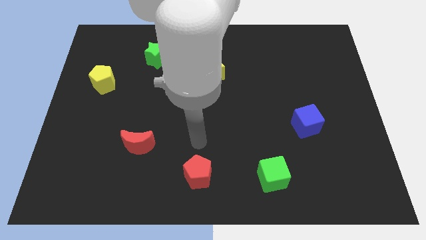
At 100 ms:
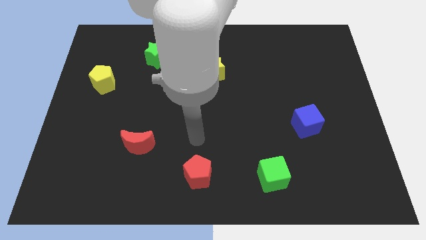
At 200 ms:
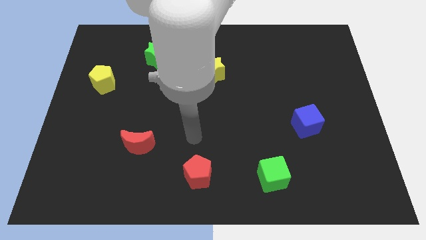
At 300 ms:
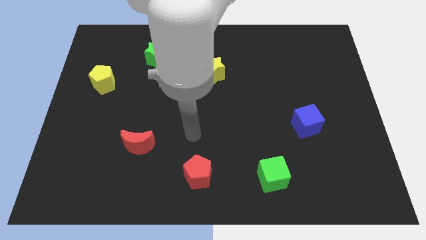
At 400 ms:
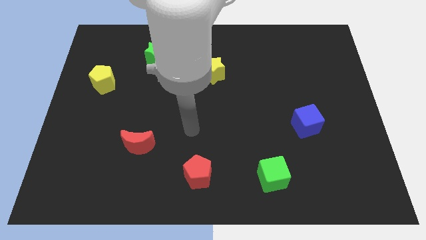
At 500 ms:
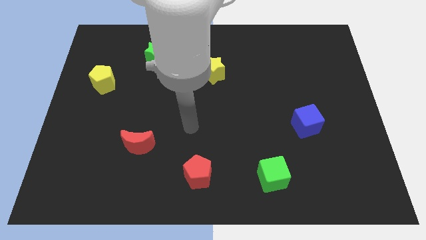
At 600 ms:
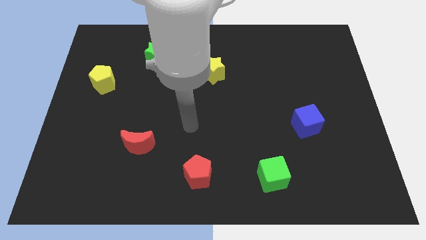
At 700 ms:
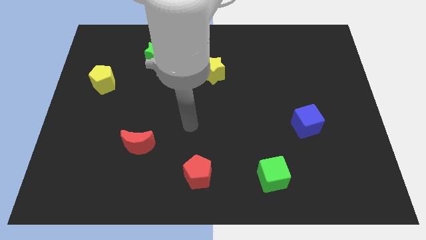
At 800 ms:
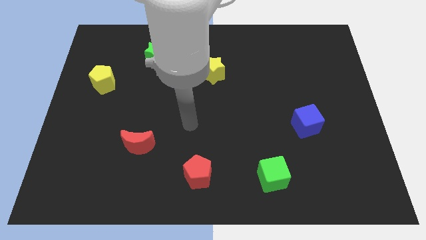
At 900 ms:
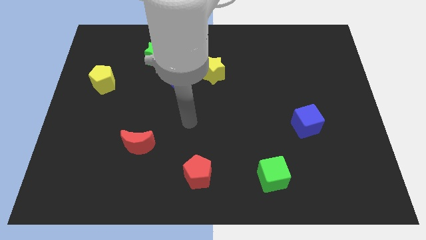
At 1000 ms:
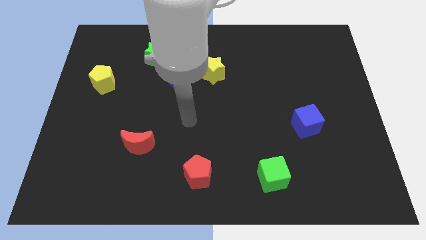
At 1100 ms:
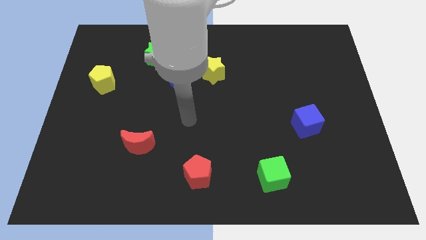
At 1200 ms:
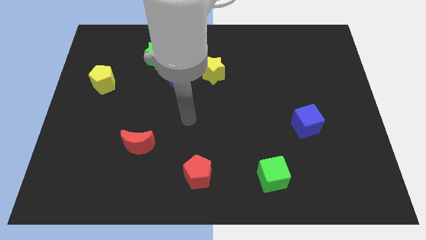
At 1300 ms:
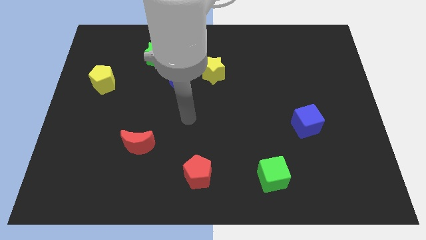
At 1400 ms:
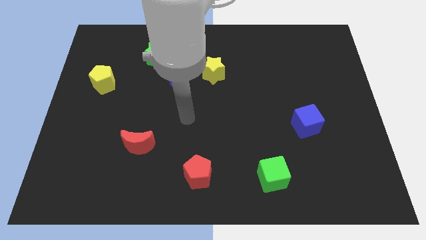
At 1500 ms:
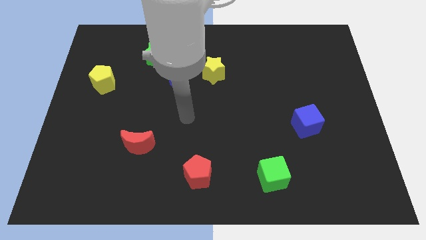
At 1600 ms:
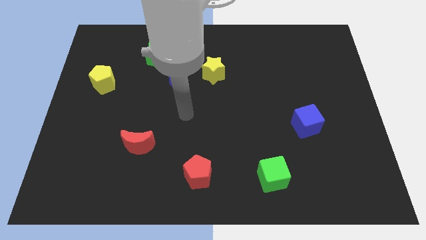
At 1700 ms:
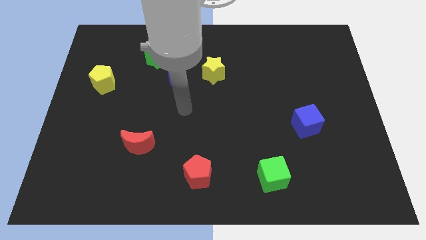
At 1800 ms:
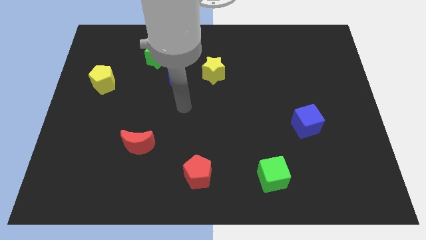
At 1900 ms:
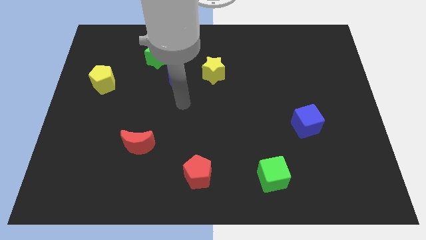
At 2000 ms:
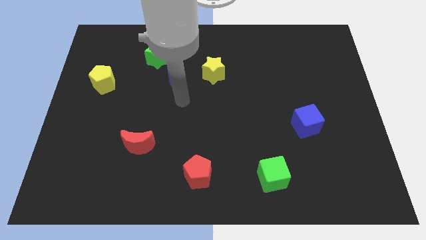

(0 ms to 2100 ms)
move your arm close to the blue moon

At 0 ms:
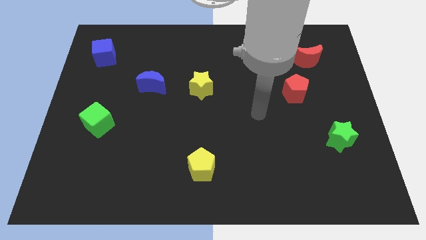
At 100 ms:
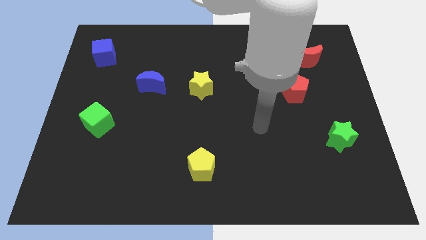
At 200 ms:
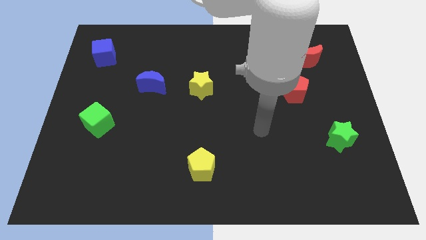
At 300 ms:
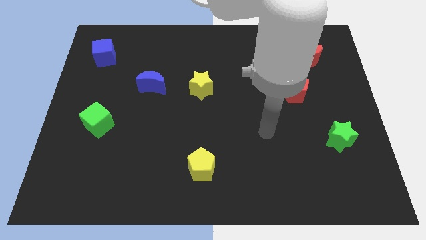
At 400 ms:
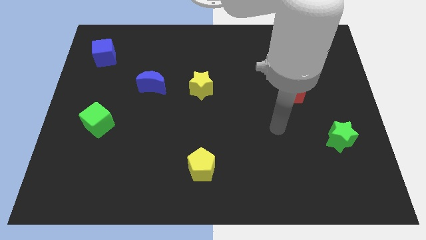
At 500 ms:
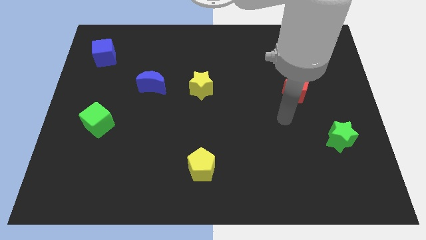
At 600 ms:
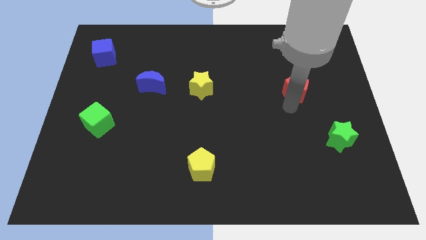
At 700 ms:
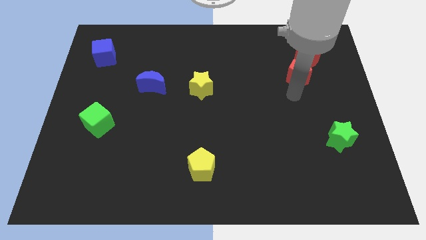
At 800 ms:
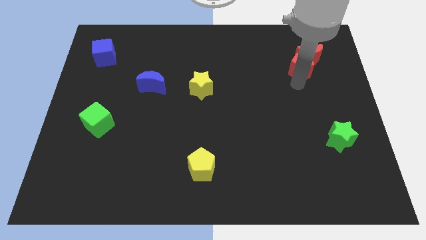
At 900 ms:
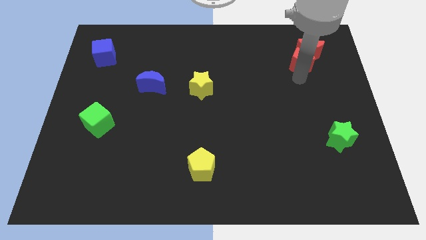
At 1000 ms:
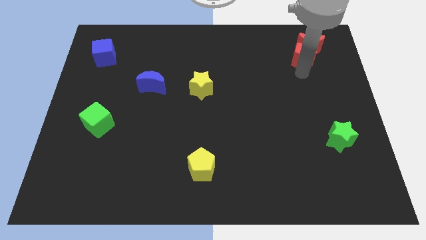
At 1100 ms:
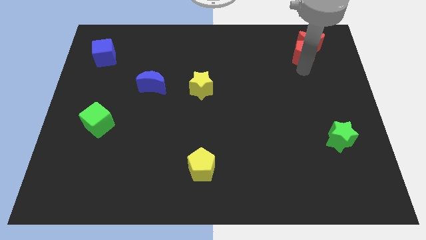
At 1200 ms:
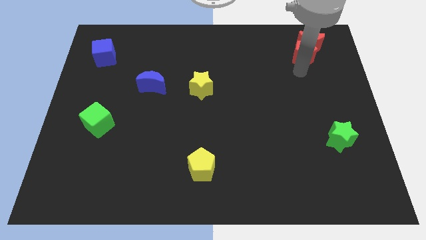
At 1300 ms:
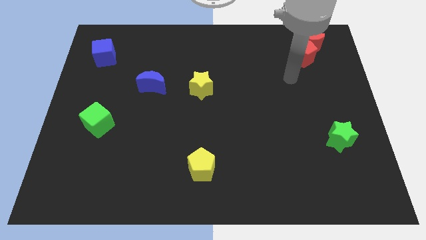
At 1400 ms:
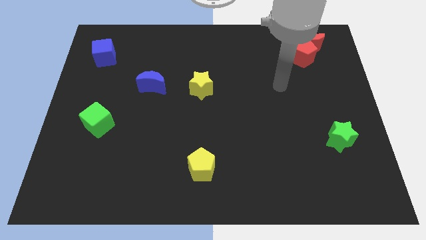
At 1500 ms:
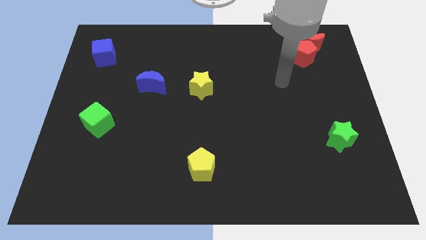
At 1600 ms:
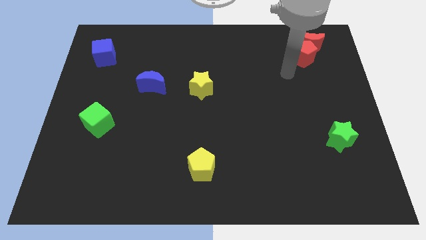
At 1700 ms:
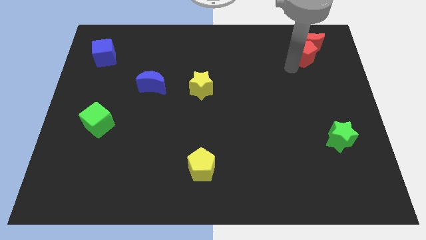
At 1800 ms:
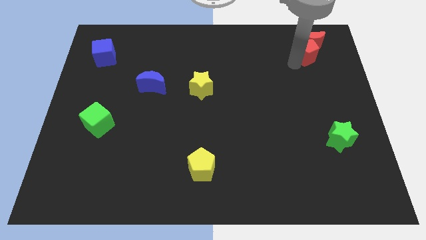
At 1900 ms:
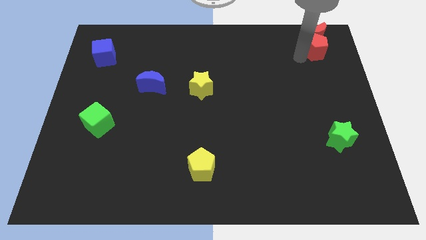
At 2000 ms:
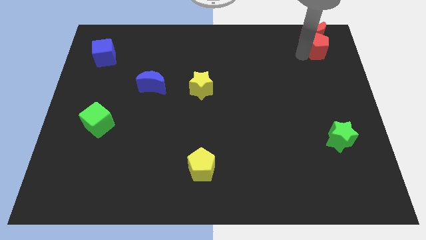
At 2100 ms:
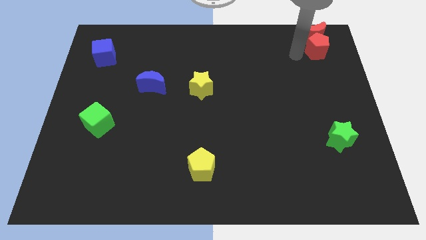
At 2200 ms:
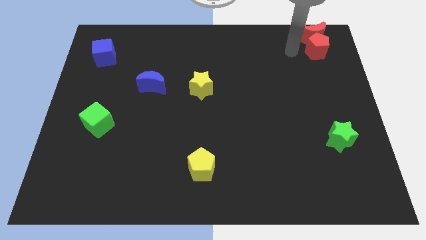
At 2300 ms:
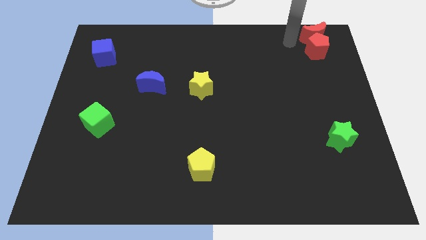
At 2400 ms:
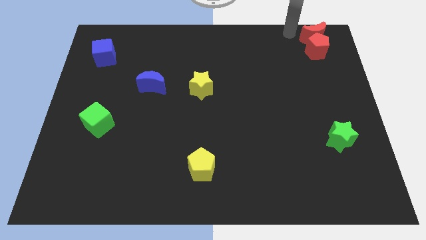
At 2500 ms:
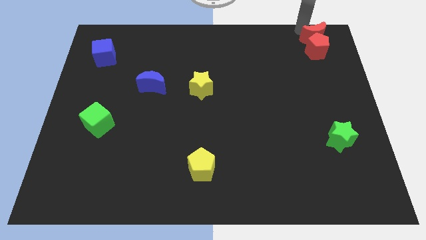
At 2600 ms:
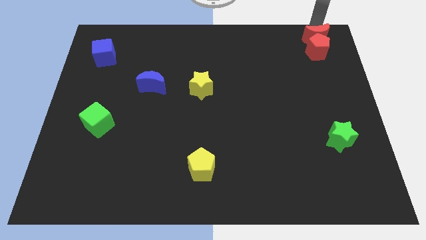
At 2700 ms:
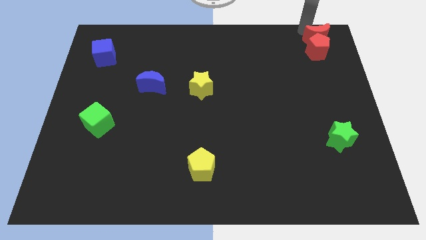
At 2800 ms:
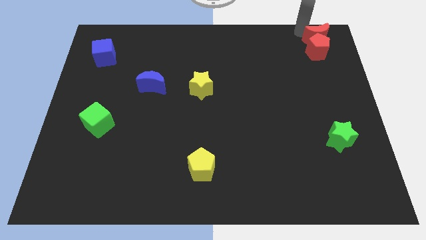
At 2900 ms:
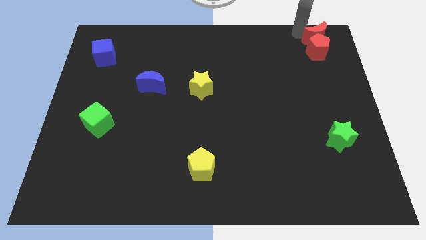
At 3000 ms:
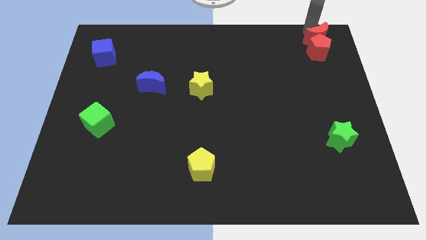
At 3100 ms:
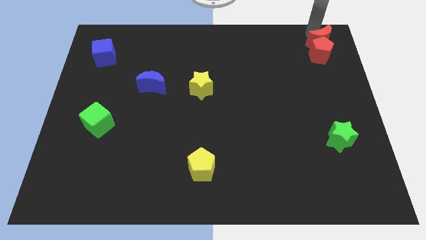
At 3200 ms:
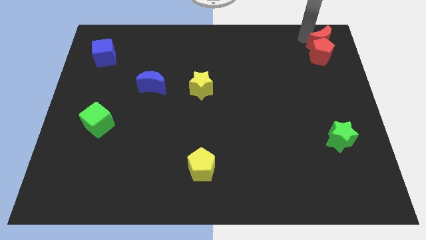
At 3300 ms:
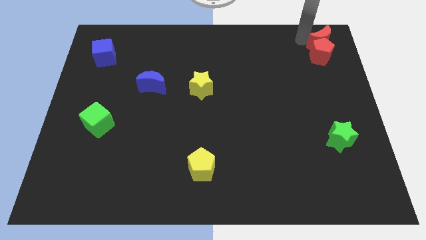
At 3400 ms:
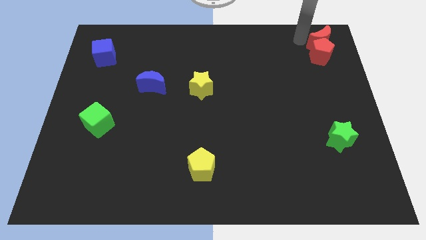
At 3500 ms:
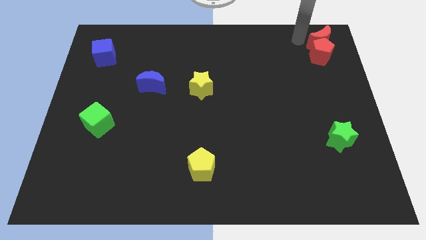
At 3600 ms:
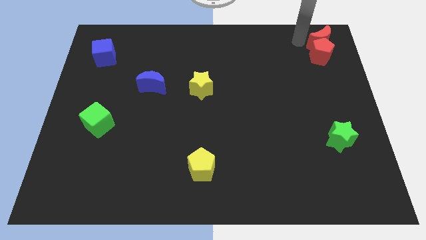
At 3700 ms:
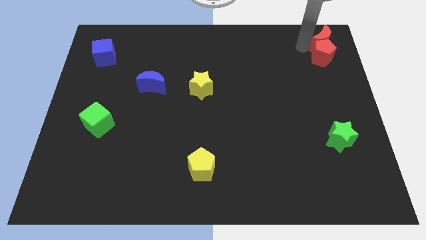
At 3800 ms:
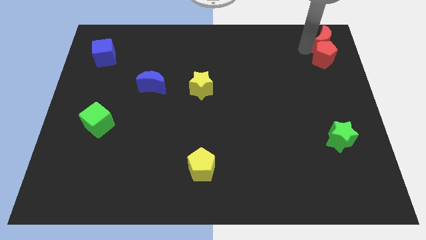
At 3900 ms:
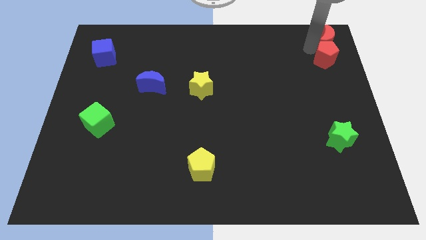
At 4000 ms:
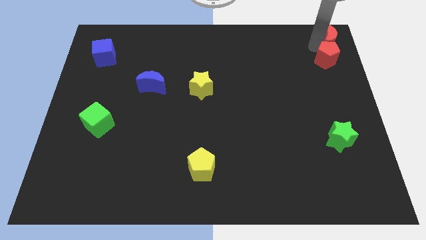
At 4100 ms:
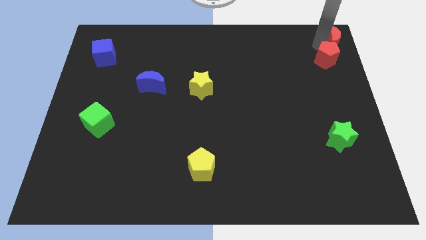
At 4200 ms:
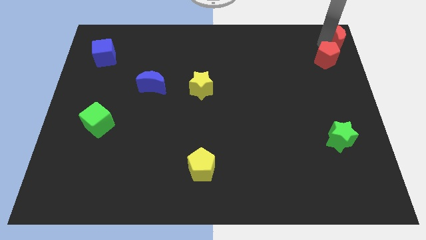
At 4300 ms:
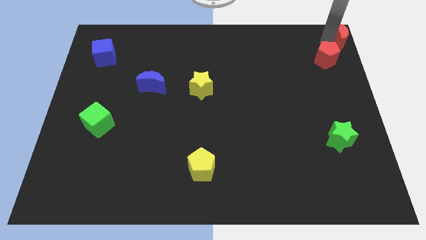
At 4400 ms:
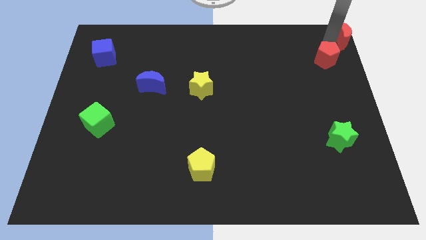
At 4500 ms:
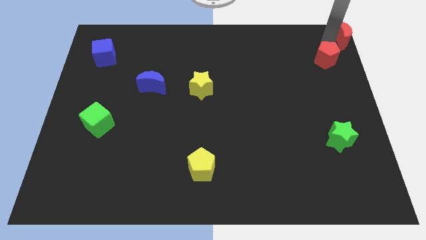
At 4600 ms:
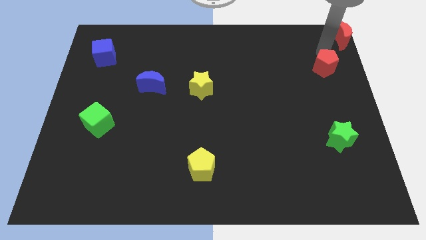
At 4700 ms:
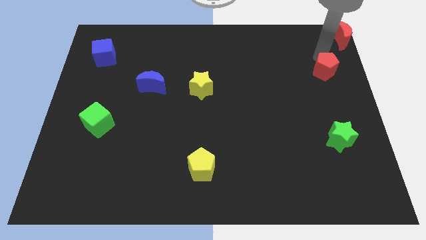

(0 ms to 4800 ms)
move the red crescent to the top right of the board

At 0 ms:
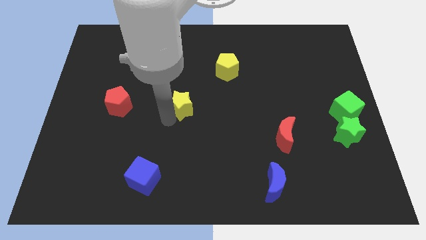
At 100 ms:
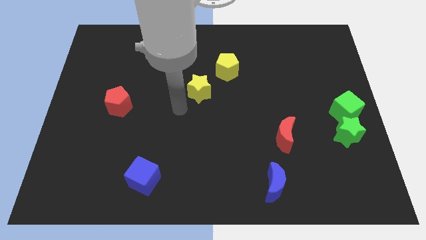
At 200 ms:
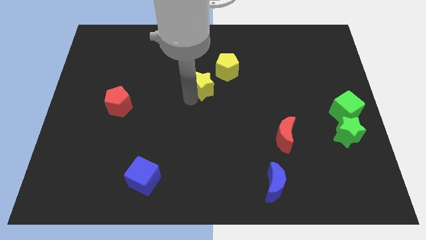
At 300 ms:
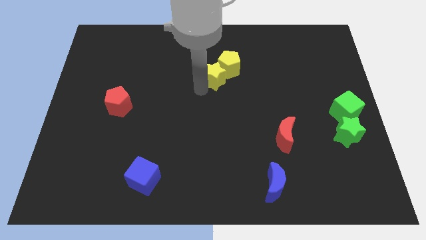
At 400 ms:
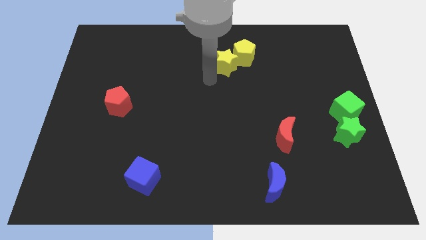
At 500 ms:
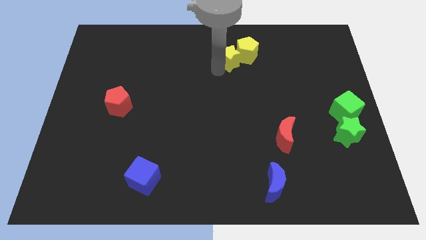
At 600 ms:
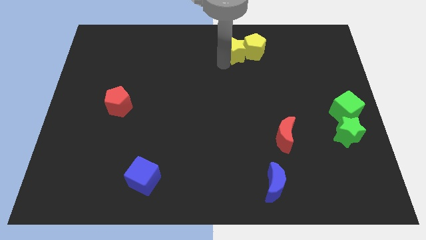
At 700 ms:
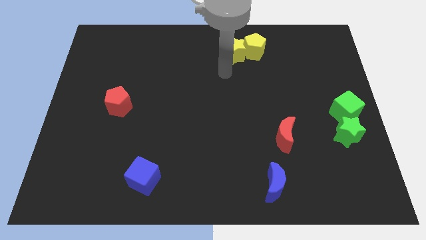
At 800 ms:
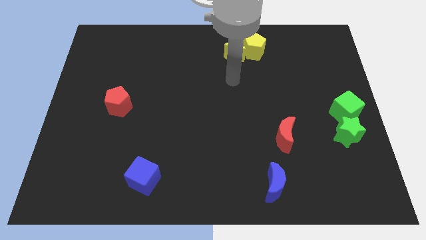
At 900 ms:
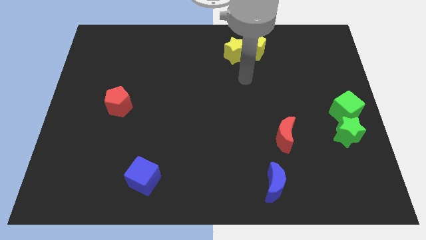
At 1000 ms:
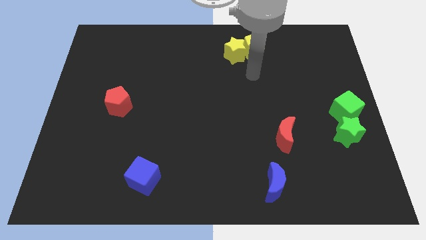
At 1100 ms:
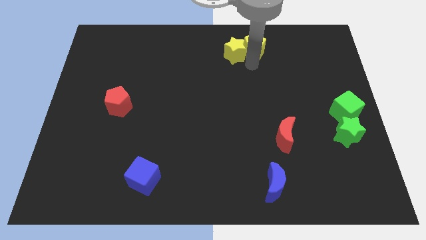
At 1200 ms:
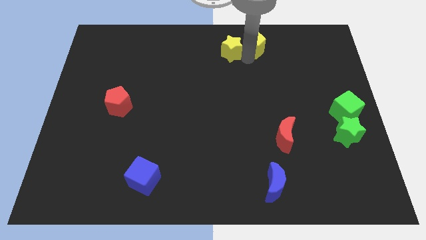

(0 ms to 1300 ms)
push the yellow star into the yellow pentagon

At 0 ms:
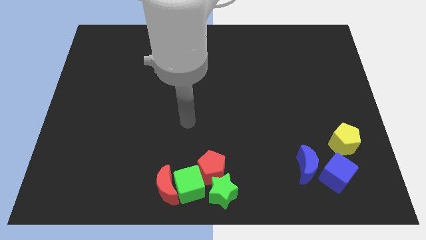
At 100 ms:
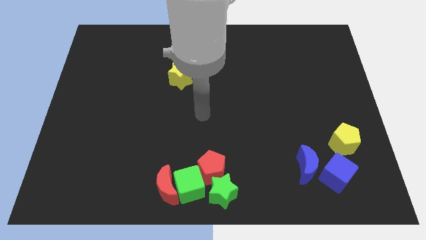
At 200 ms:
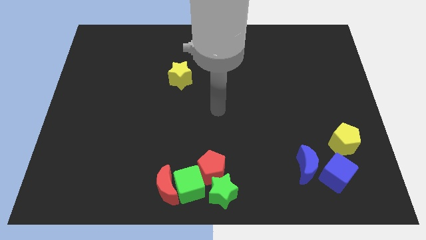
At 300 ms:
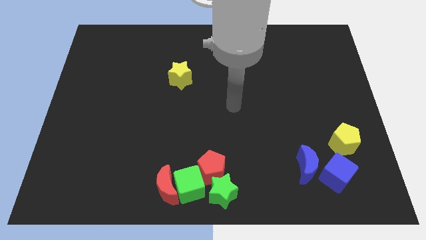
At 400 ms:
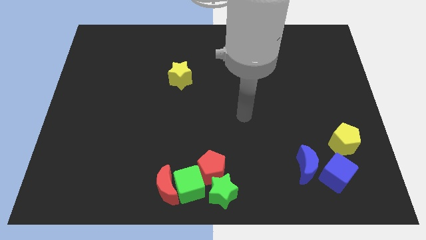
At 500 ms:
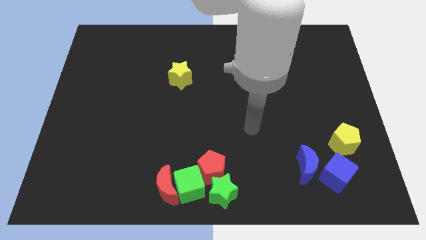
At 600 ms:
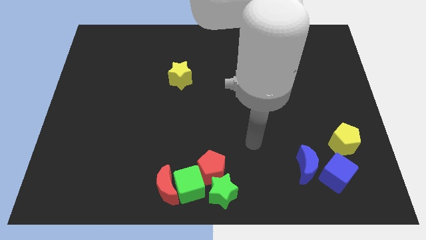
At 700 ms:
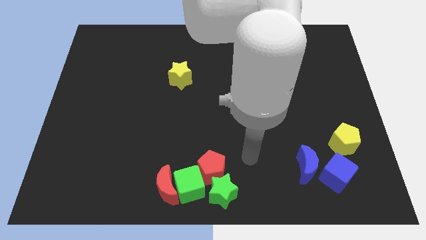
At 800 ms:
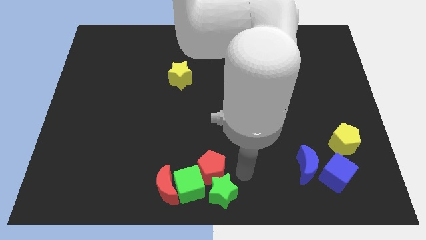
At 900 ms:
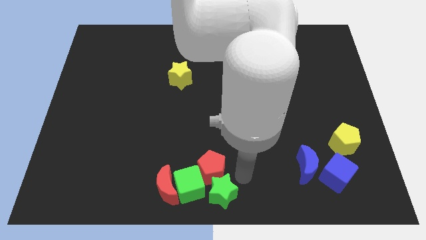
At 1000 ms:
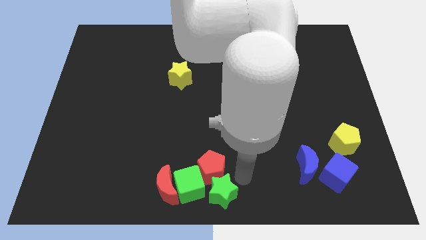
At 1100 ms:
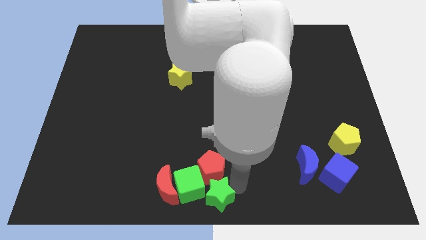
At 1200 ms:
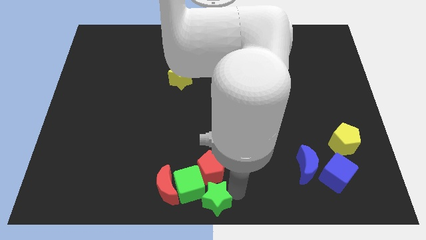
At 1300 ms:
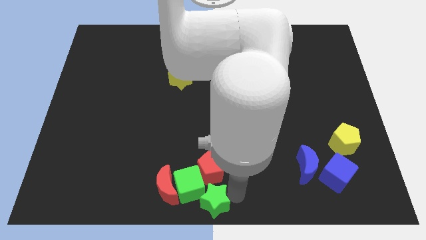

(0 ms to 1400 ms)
push the green star slightly to the bottom center
